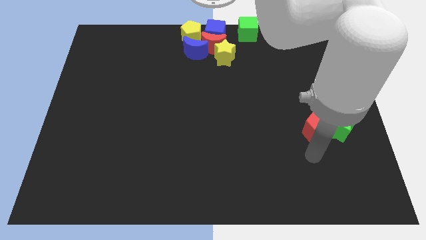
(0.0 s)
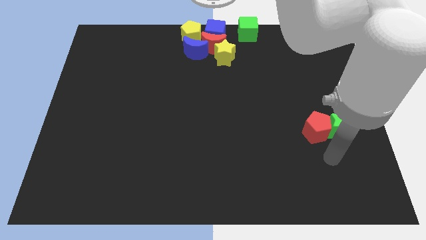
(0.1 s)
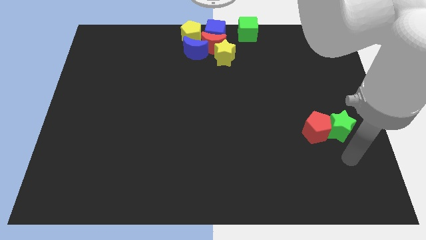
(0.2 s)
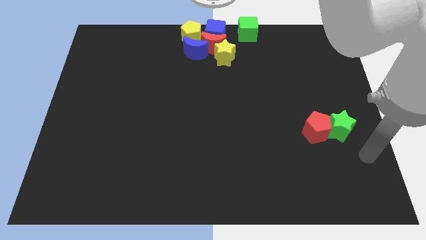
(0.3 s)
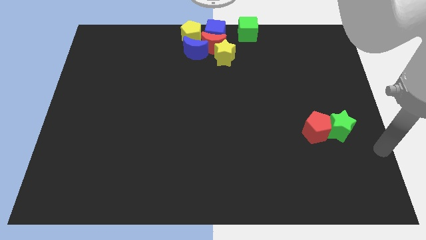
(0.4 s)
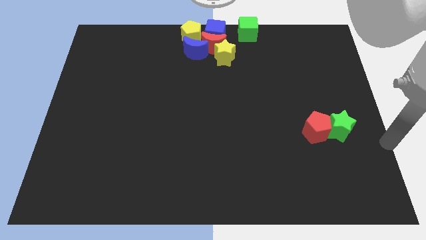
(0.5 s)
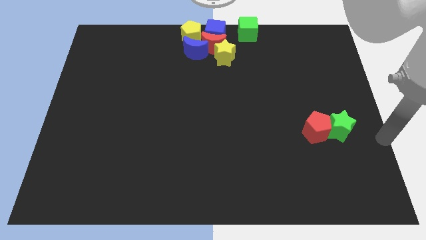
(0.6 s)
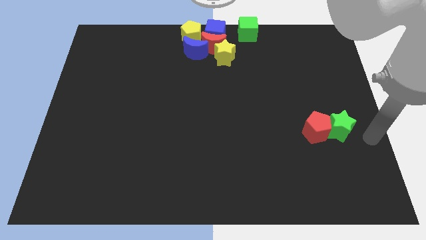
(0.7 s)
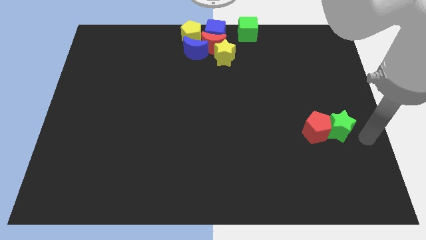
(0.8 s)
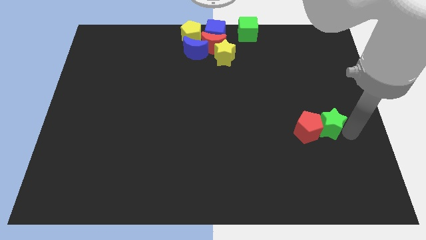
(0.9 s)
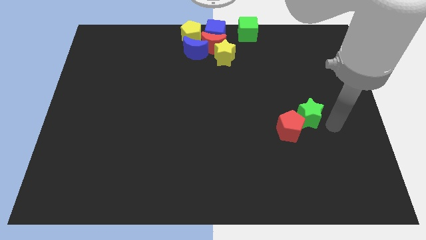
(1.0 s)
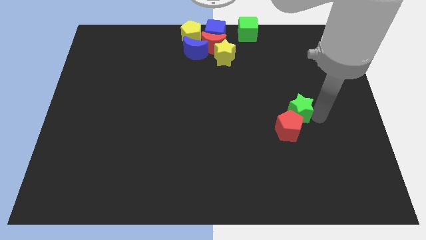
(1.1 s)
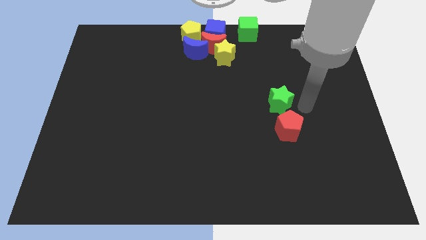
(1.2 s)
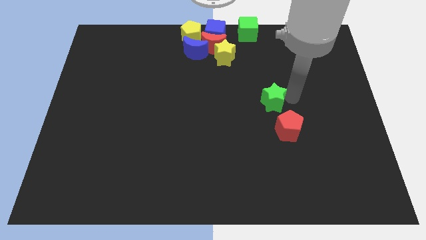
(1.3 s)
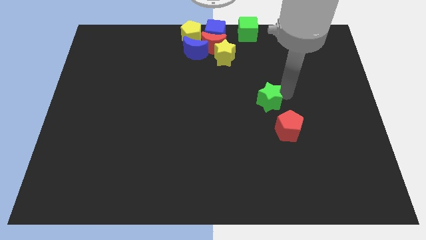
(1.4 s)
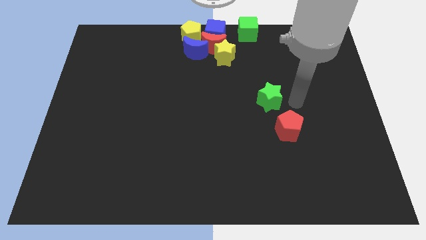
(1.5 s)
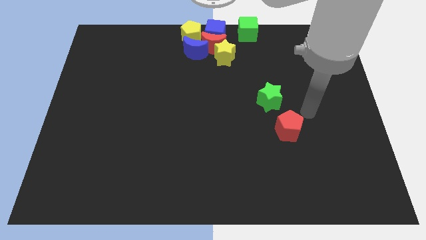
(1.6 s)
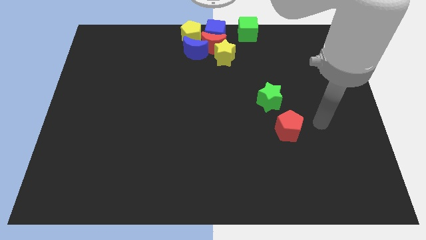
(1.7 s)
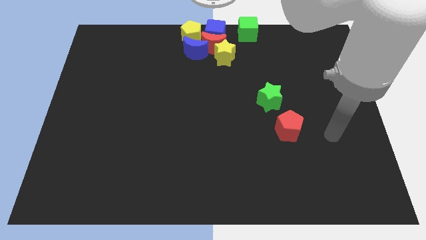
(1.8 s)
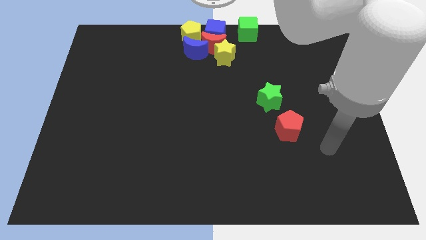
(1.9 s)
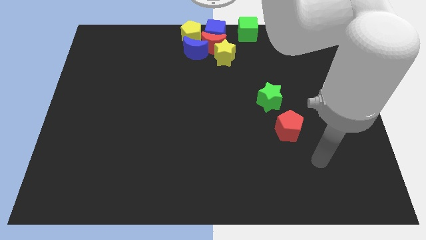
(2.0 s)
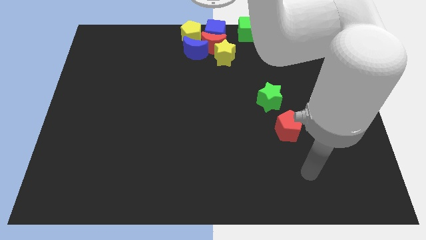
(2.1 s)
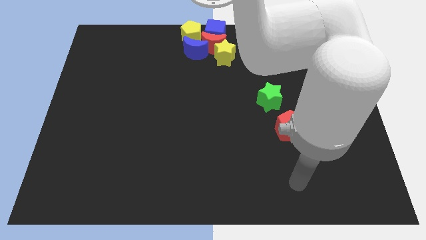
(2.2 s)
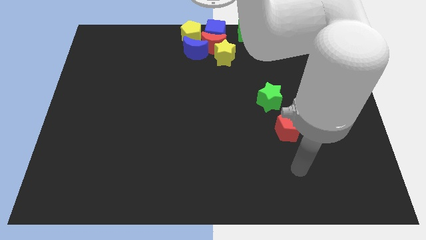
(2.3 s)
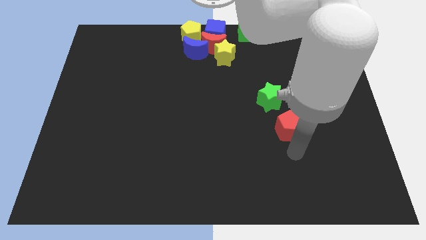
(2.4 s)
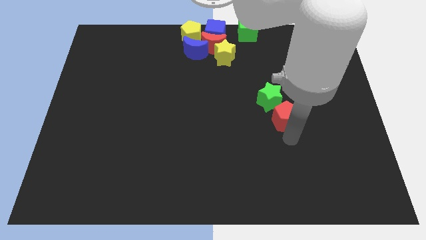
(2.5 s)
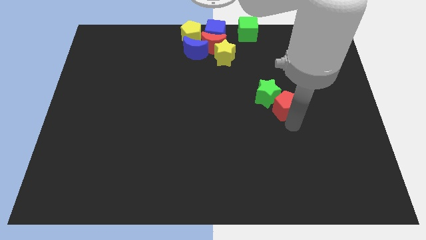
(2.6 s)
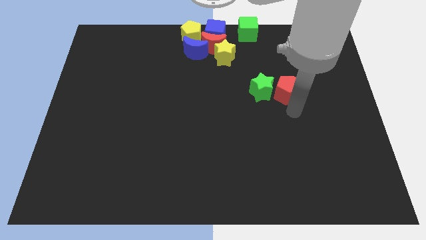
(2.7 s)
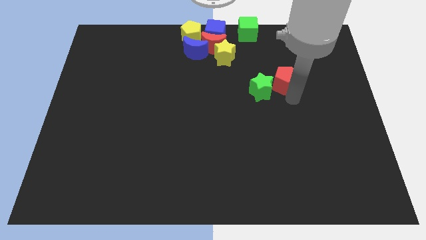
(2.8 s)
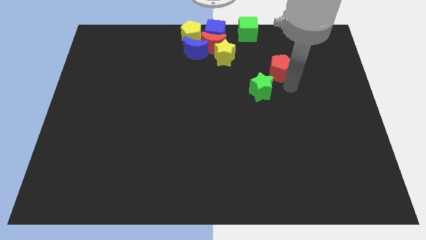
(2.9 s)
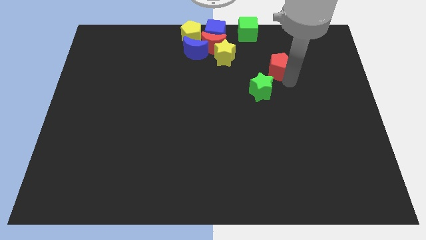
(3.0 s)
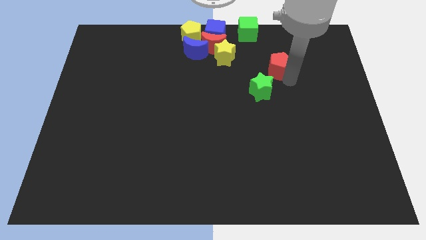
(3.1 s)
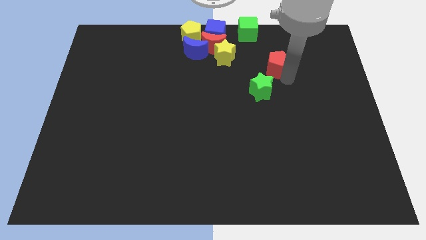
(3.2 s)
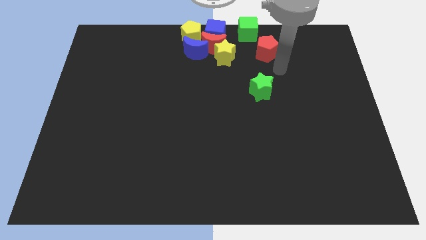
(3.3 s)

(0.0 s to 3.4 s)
move the red pentagon to the right of the yellow star

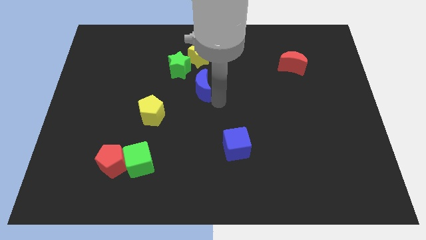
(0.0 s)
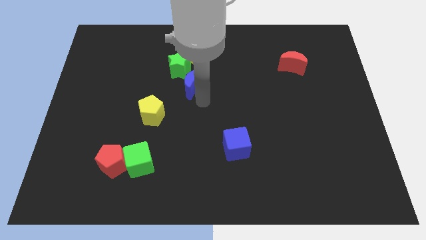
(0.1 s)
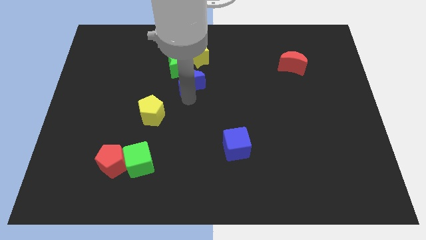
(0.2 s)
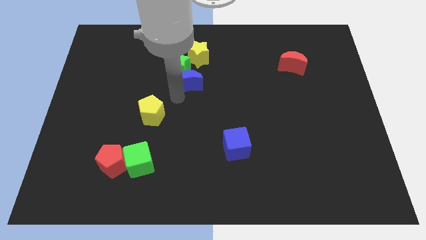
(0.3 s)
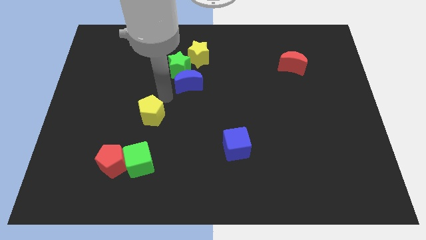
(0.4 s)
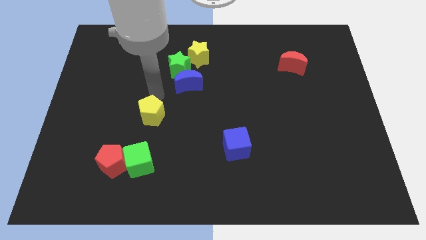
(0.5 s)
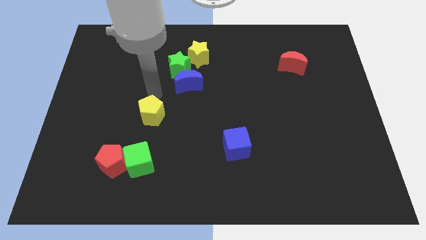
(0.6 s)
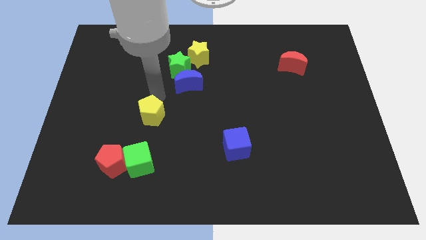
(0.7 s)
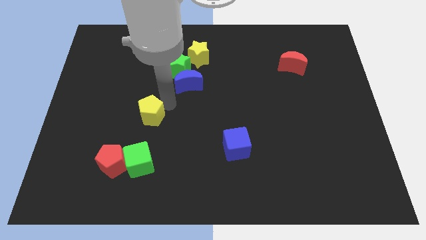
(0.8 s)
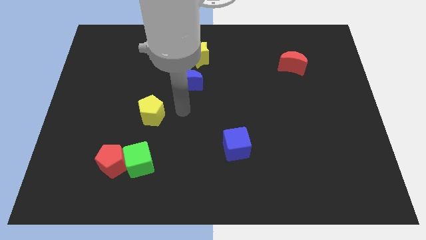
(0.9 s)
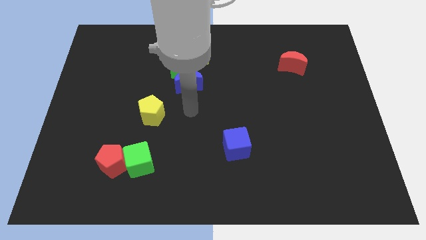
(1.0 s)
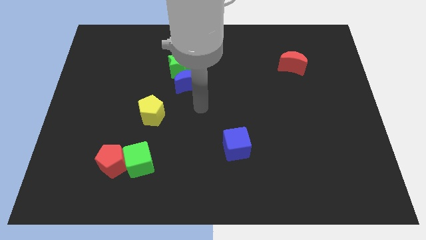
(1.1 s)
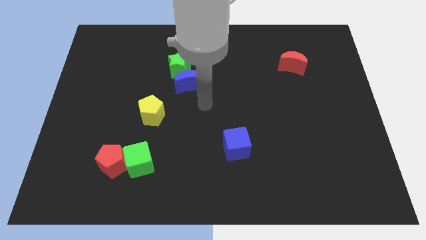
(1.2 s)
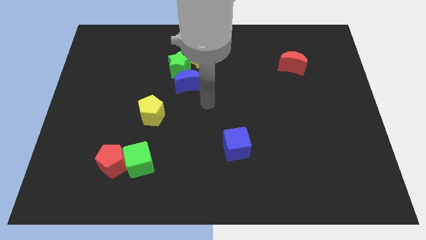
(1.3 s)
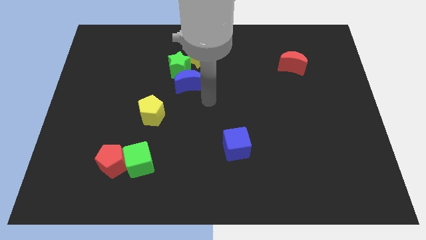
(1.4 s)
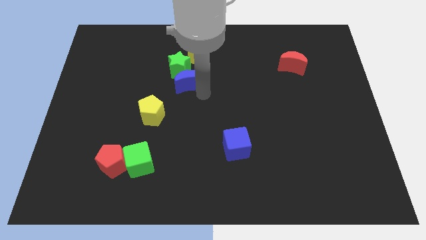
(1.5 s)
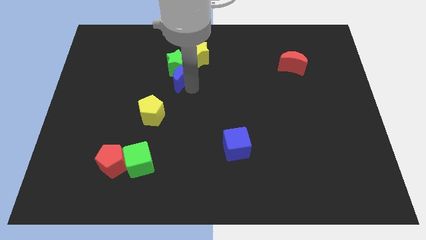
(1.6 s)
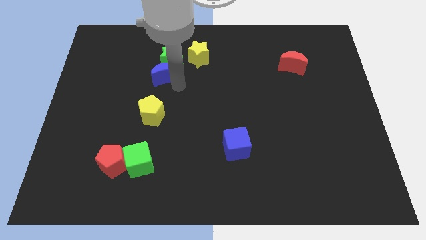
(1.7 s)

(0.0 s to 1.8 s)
move the blue crescent towards the green star

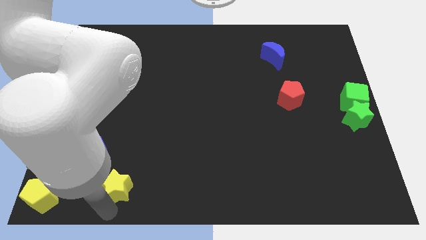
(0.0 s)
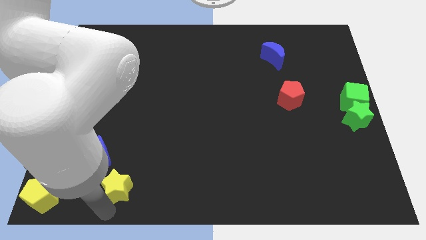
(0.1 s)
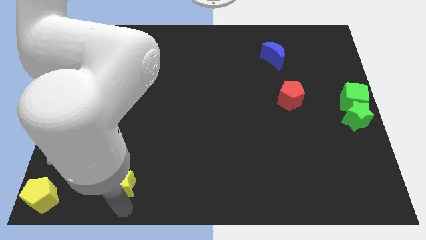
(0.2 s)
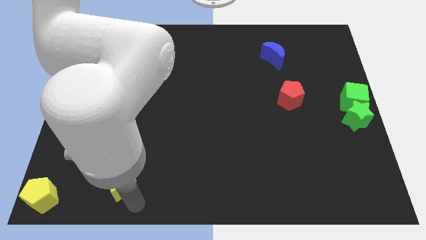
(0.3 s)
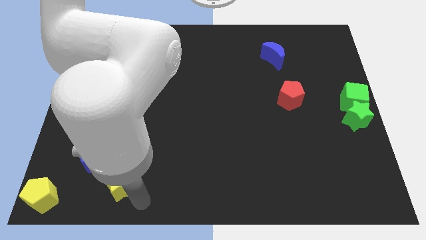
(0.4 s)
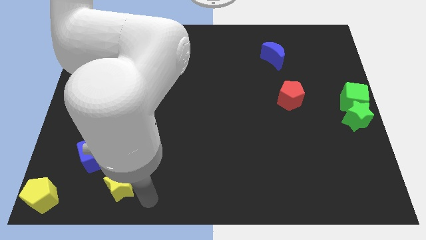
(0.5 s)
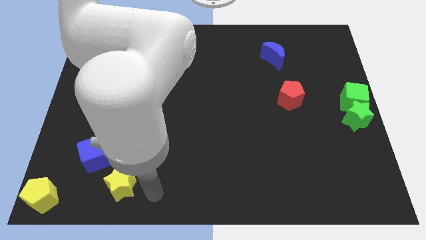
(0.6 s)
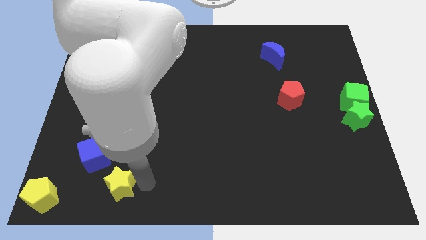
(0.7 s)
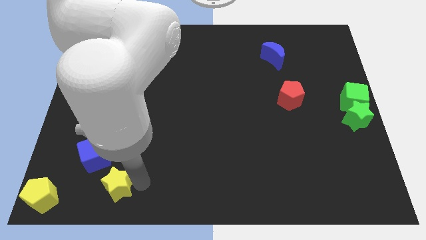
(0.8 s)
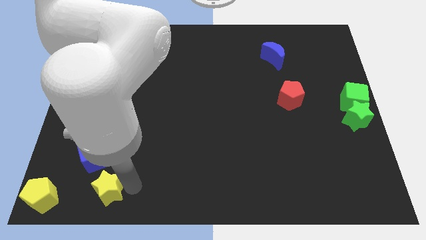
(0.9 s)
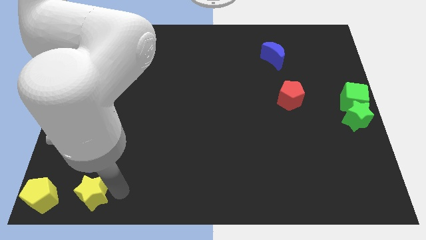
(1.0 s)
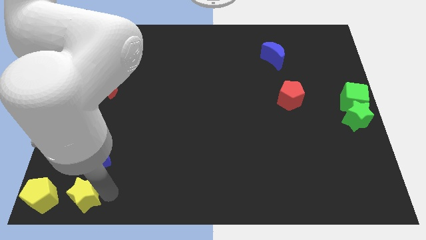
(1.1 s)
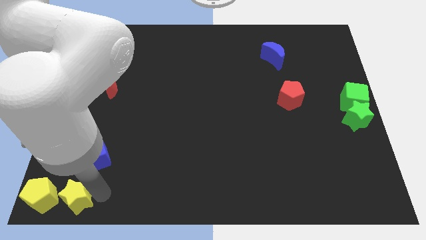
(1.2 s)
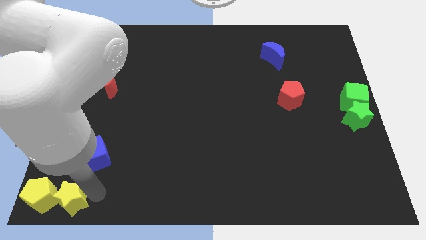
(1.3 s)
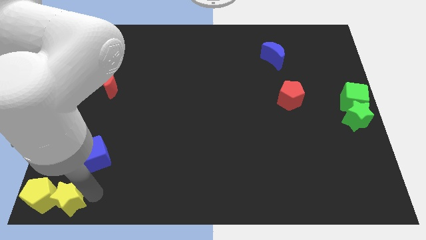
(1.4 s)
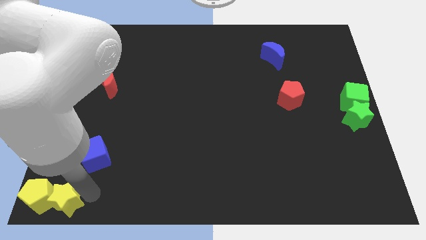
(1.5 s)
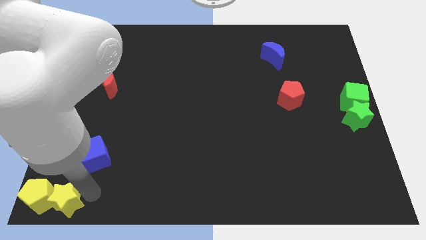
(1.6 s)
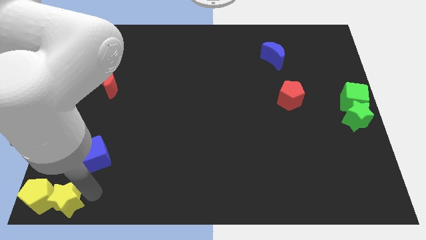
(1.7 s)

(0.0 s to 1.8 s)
push the yellow star into the yellow pentagon

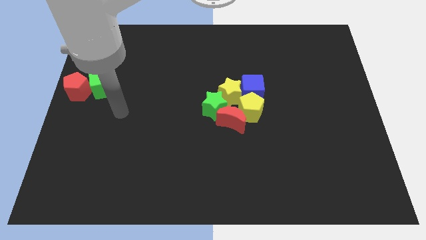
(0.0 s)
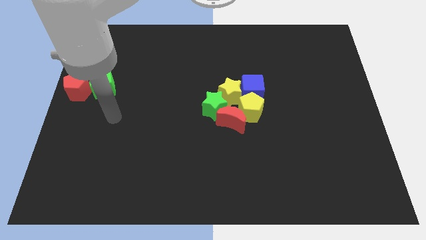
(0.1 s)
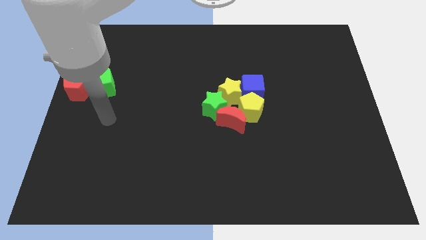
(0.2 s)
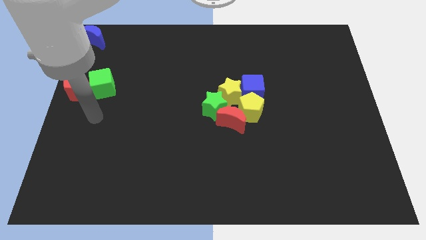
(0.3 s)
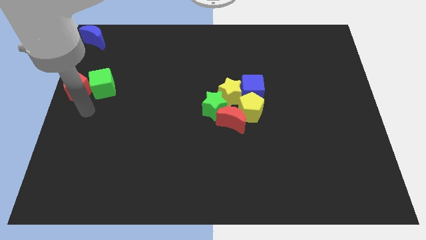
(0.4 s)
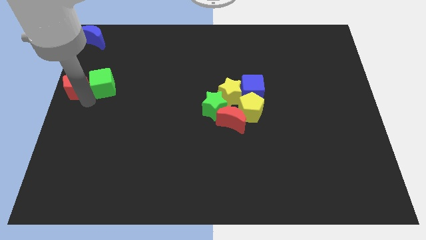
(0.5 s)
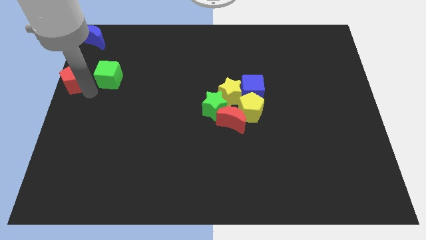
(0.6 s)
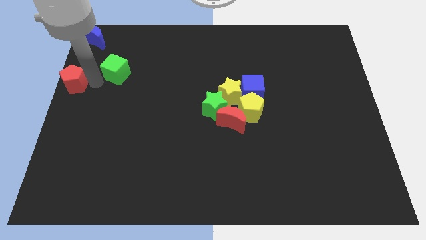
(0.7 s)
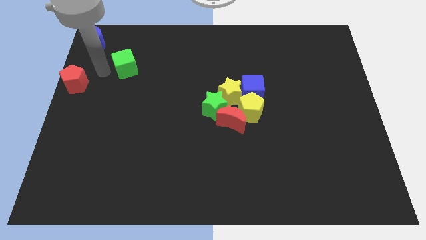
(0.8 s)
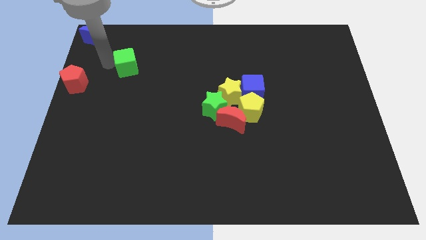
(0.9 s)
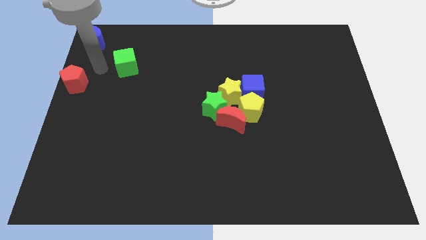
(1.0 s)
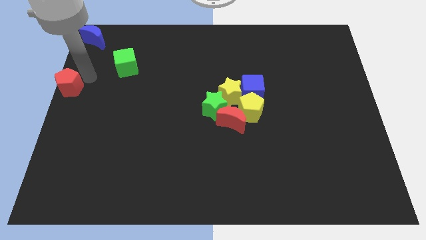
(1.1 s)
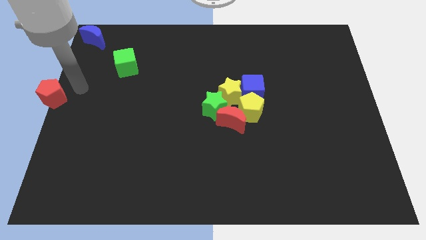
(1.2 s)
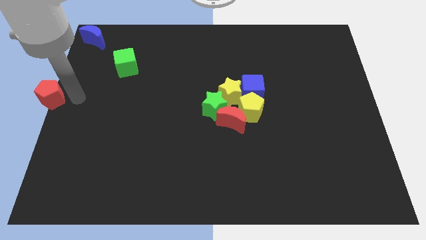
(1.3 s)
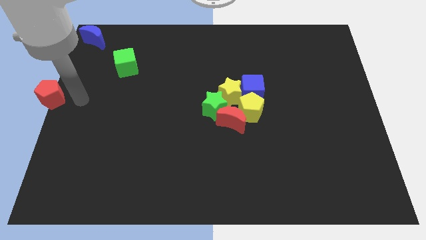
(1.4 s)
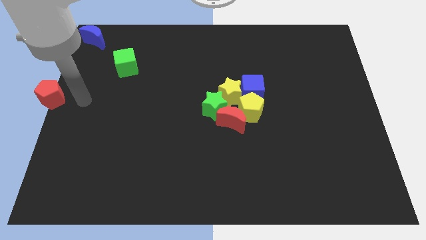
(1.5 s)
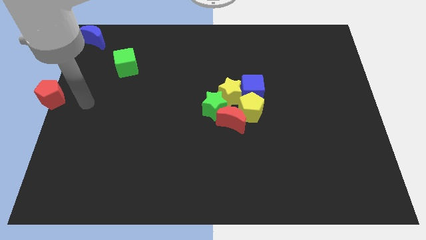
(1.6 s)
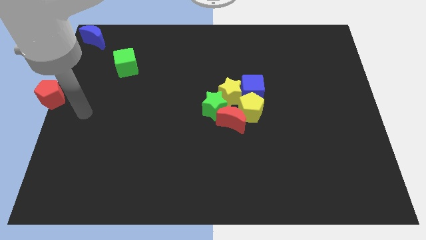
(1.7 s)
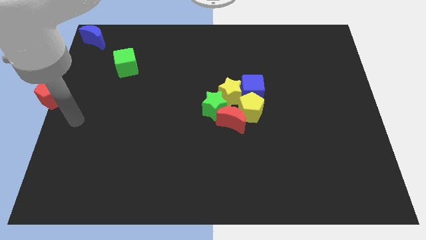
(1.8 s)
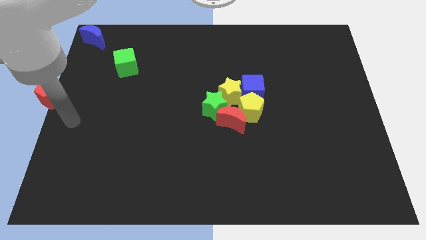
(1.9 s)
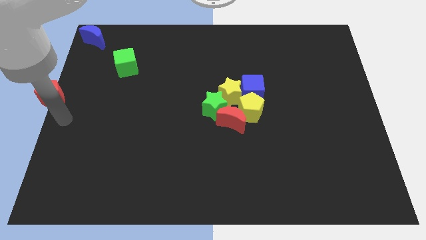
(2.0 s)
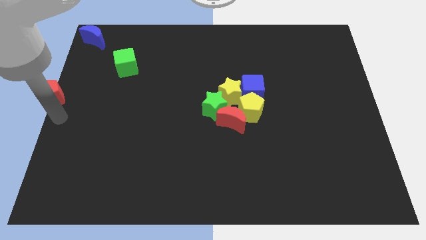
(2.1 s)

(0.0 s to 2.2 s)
separate the red pentagon from green cube
